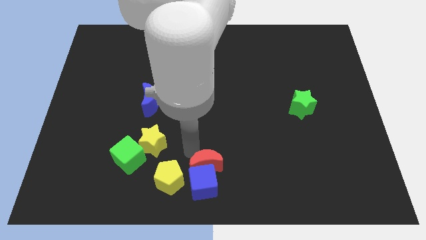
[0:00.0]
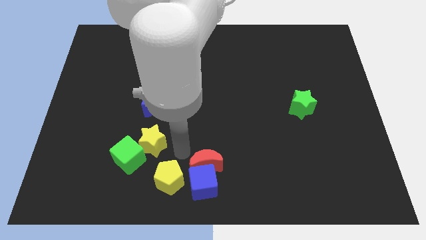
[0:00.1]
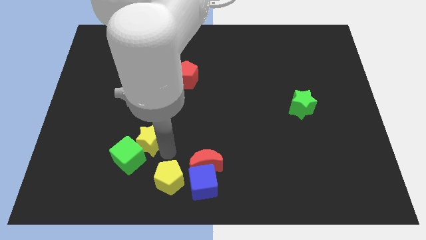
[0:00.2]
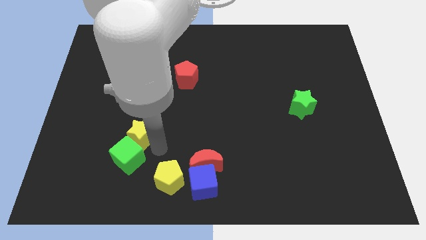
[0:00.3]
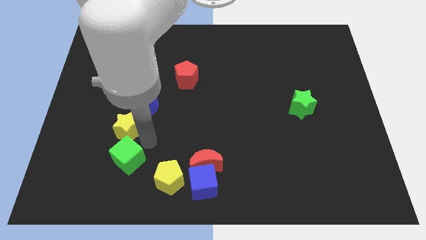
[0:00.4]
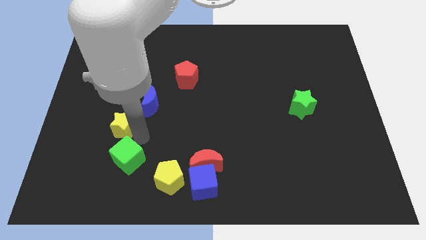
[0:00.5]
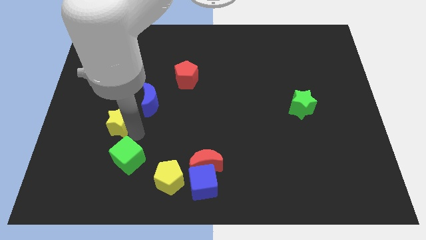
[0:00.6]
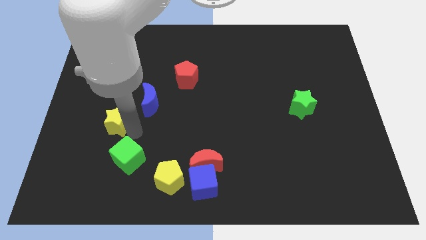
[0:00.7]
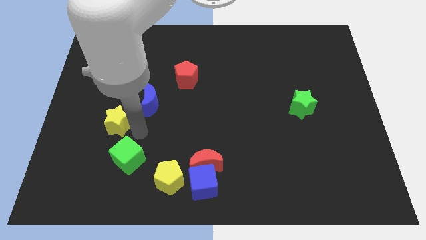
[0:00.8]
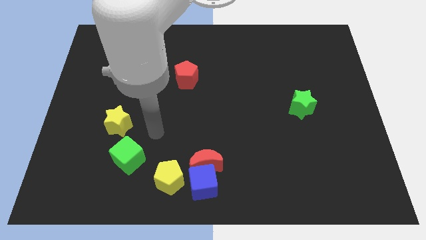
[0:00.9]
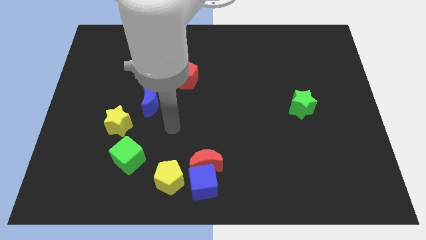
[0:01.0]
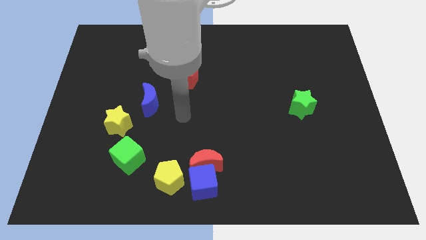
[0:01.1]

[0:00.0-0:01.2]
move the yellow star above the green cube

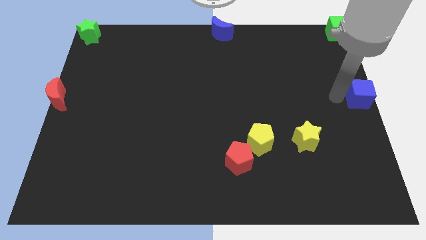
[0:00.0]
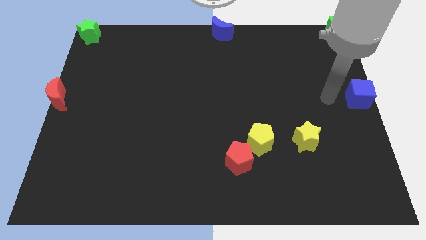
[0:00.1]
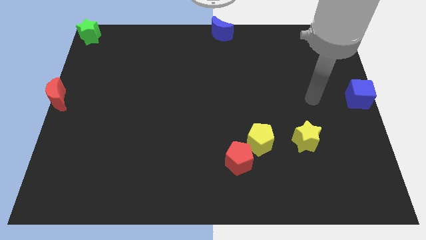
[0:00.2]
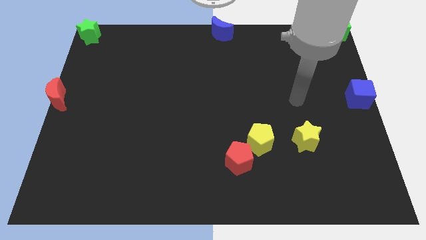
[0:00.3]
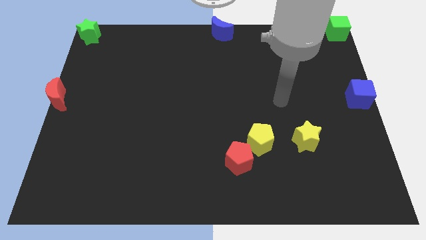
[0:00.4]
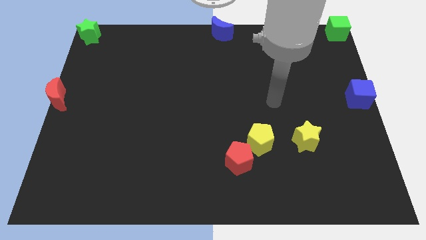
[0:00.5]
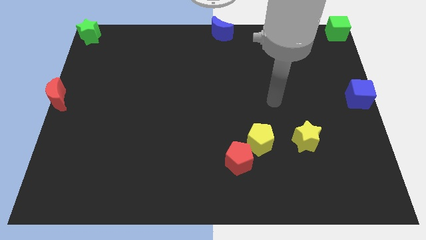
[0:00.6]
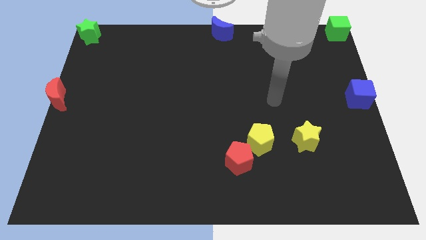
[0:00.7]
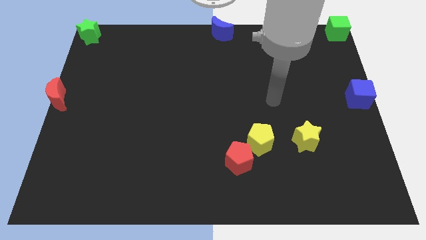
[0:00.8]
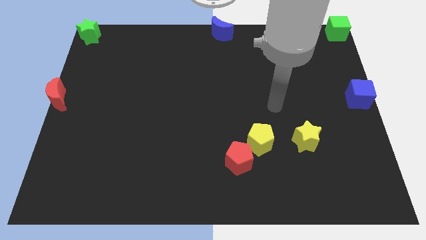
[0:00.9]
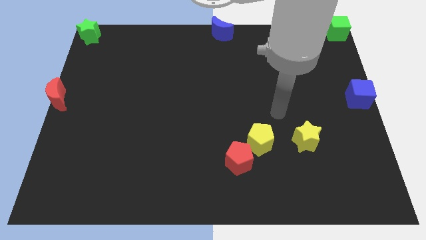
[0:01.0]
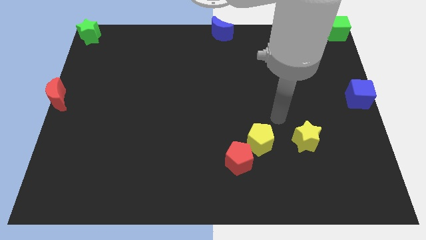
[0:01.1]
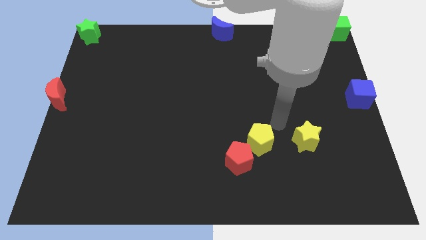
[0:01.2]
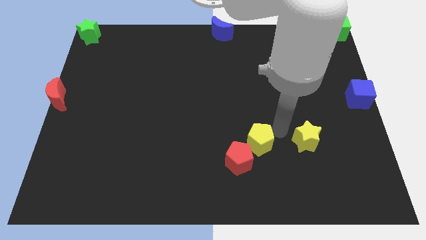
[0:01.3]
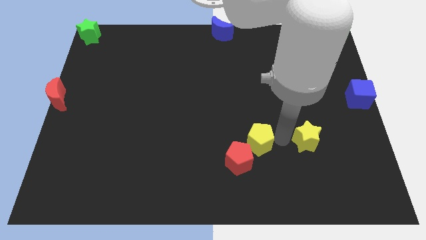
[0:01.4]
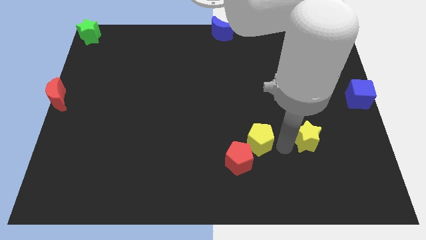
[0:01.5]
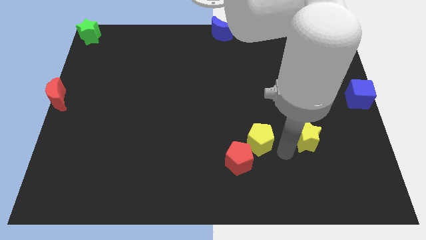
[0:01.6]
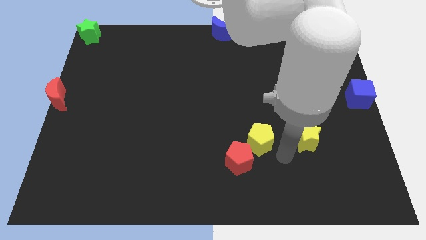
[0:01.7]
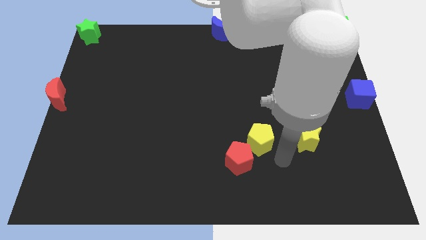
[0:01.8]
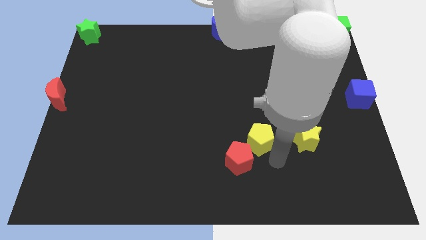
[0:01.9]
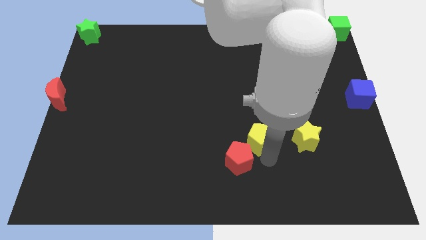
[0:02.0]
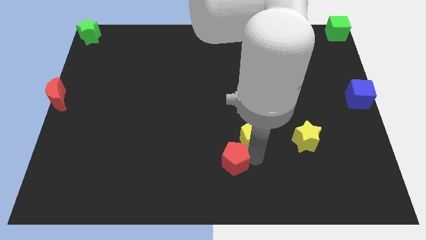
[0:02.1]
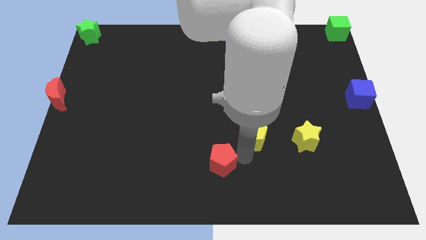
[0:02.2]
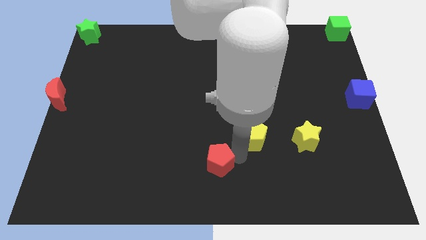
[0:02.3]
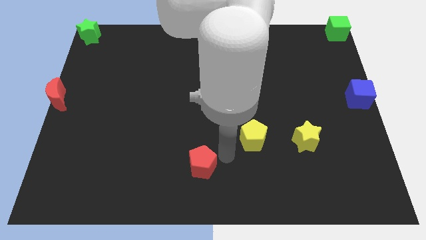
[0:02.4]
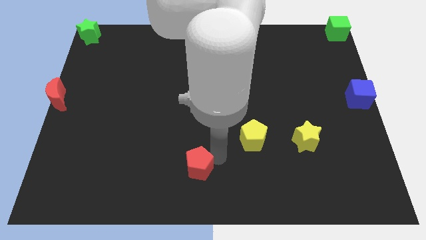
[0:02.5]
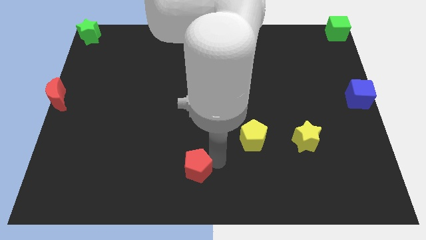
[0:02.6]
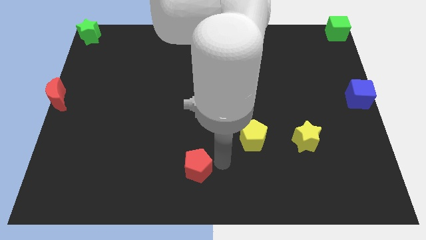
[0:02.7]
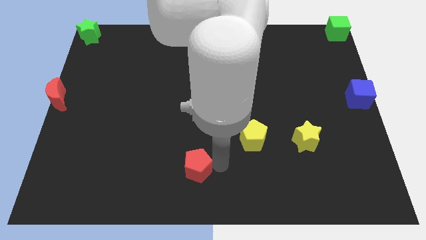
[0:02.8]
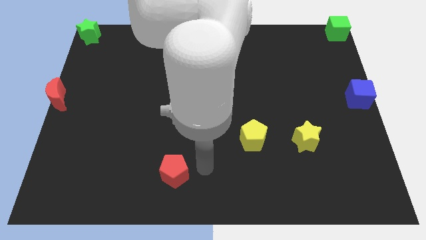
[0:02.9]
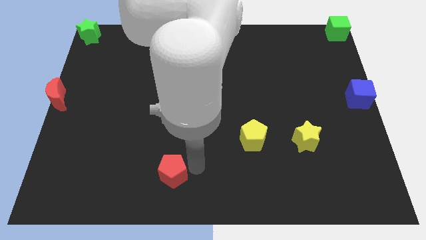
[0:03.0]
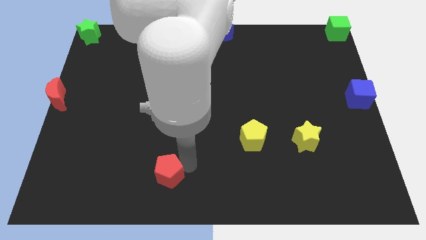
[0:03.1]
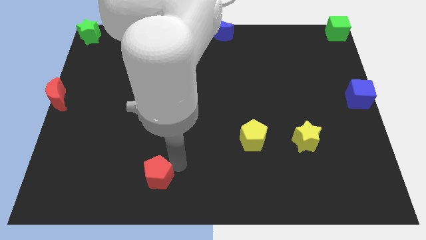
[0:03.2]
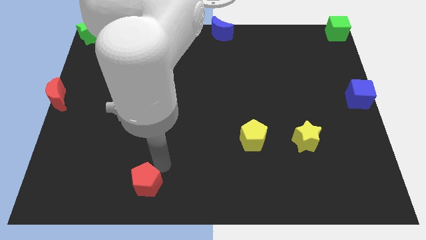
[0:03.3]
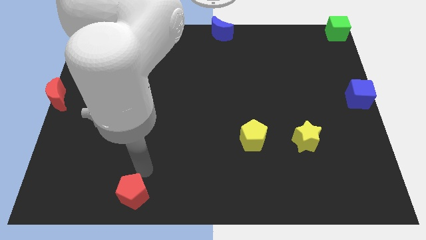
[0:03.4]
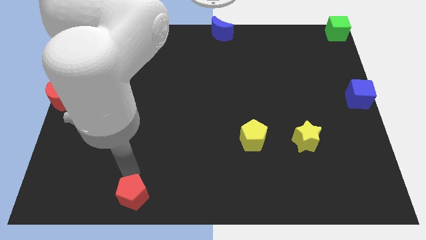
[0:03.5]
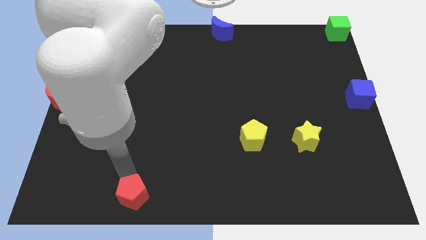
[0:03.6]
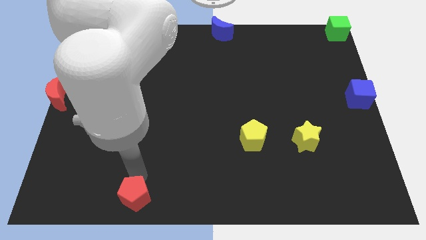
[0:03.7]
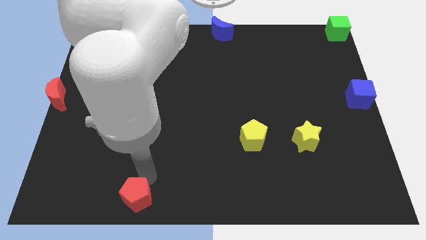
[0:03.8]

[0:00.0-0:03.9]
separate the red pentagon from yellow pentagon

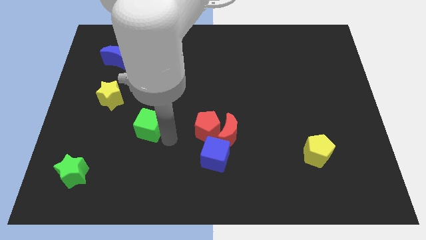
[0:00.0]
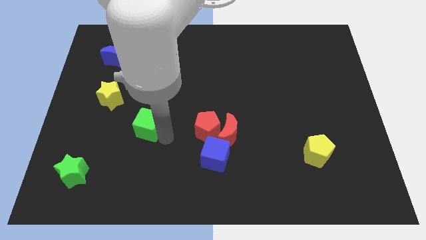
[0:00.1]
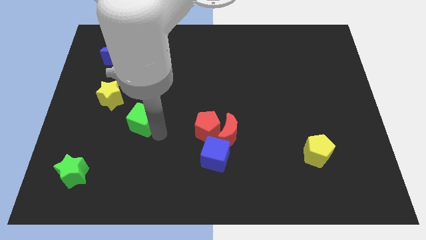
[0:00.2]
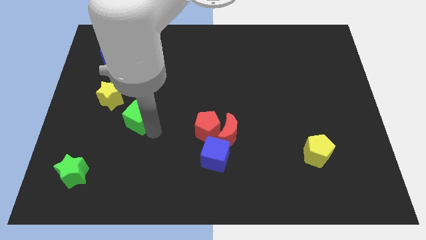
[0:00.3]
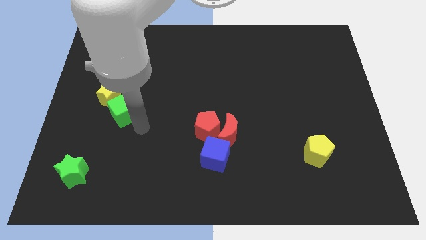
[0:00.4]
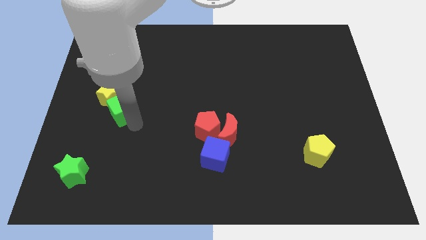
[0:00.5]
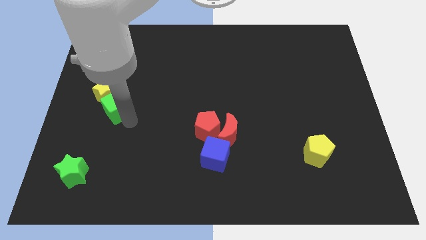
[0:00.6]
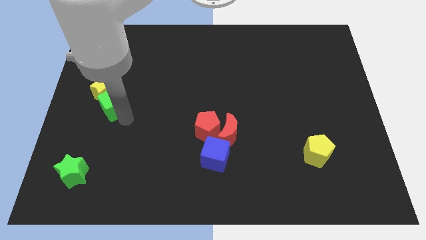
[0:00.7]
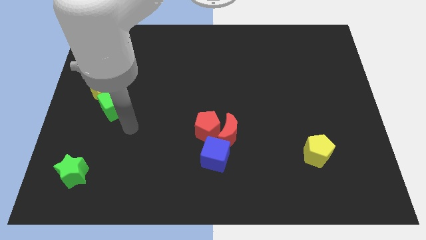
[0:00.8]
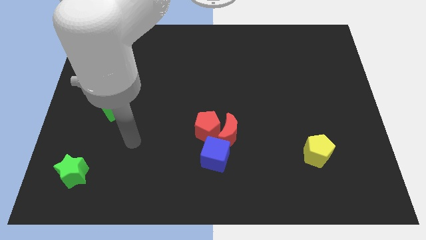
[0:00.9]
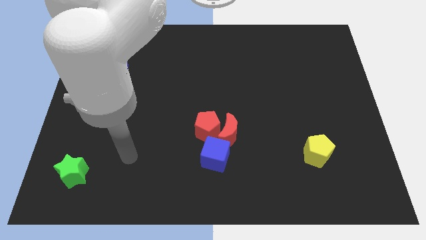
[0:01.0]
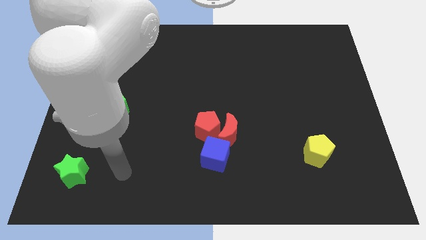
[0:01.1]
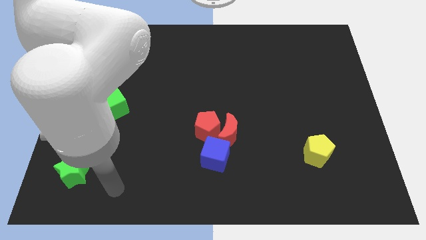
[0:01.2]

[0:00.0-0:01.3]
place the green square diagonally to the yellow star

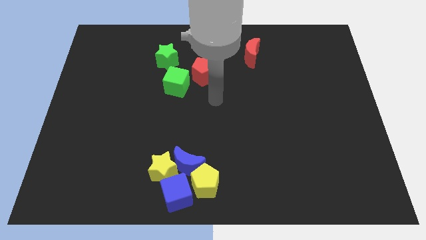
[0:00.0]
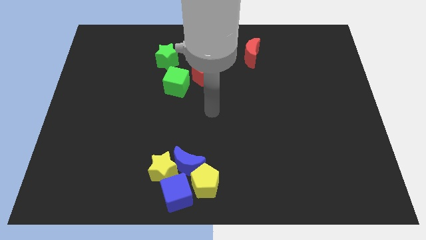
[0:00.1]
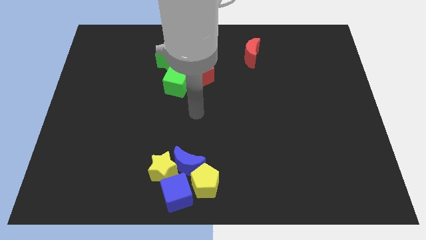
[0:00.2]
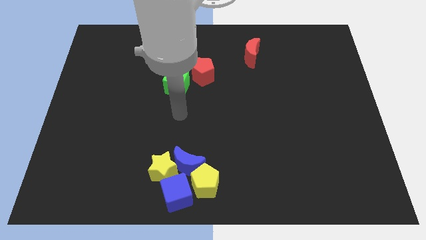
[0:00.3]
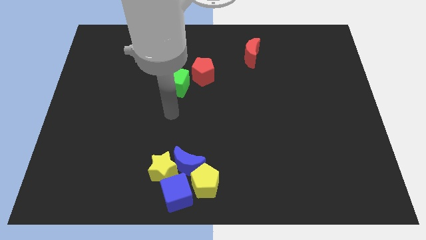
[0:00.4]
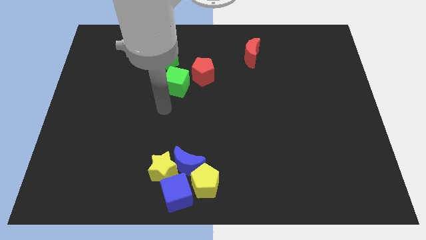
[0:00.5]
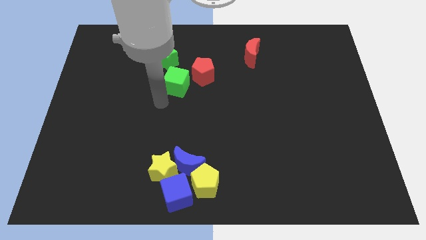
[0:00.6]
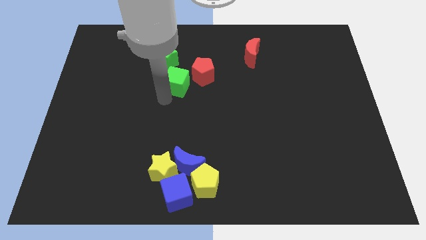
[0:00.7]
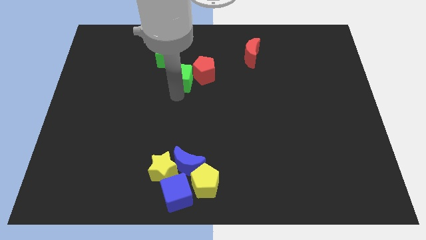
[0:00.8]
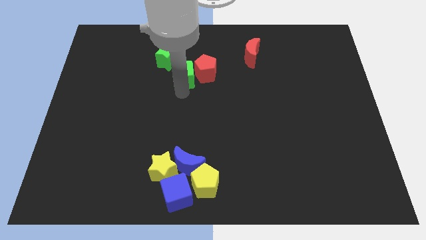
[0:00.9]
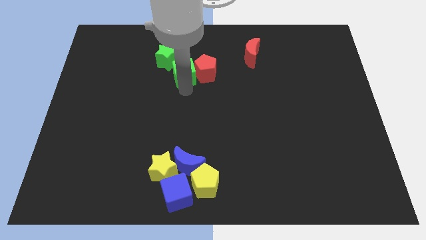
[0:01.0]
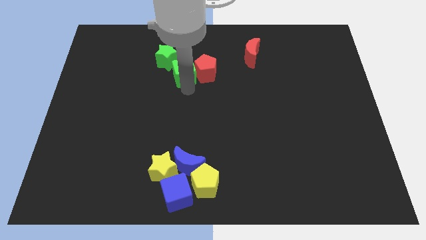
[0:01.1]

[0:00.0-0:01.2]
push the green cube into red pentagon

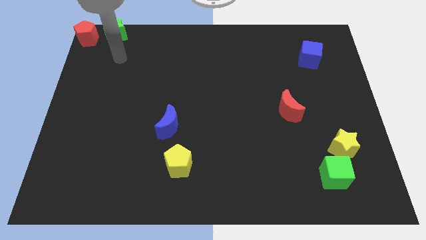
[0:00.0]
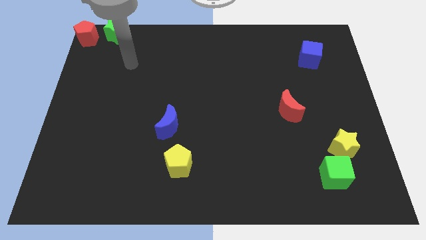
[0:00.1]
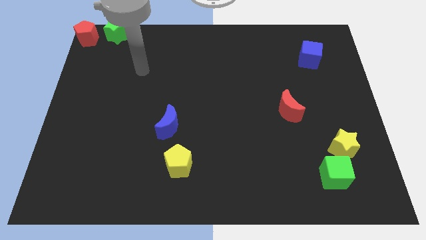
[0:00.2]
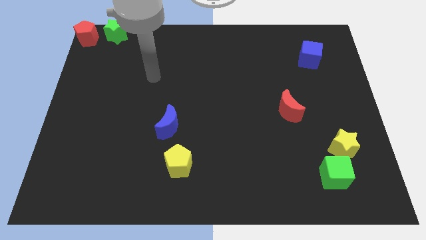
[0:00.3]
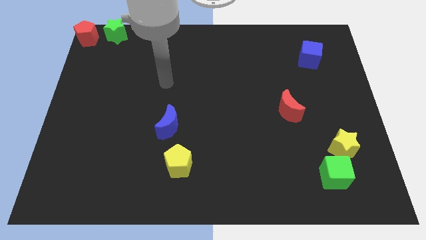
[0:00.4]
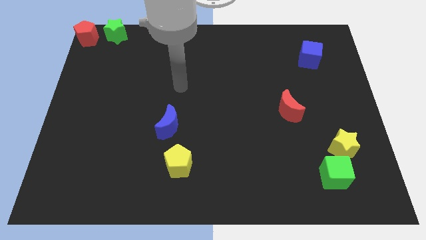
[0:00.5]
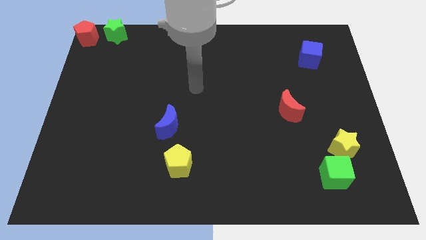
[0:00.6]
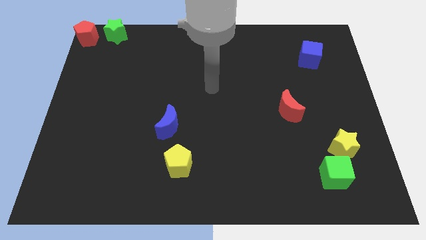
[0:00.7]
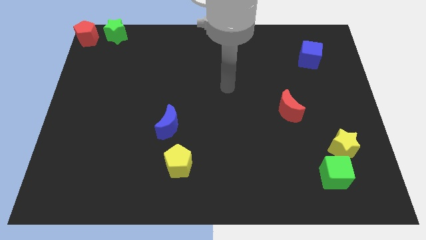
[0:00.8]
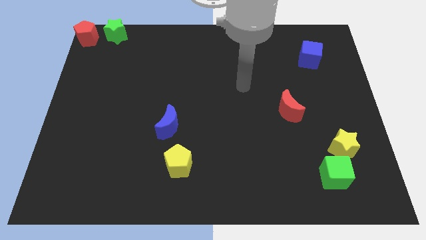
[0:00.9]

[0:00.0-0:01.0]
move your arm away from green star

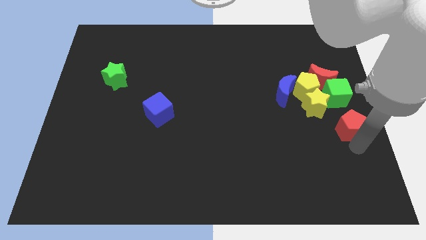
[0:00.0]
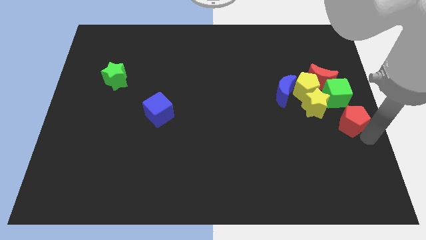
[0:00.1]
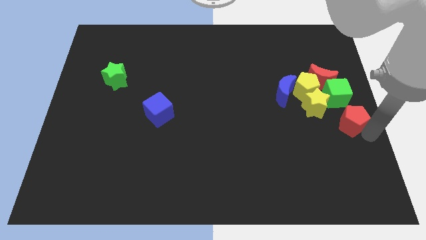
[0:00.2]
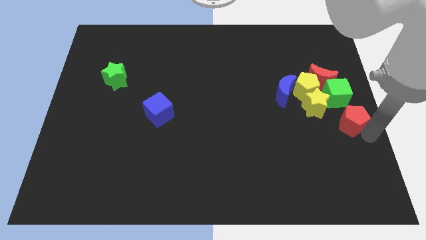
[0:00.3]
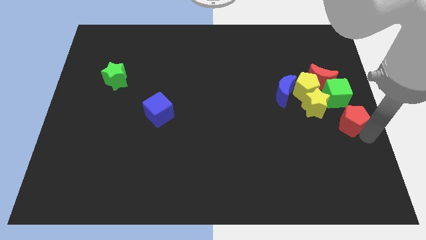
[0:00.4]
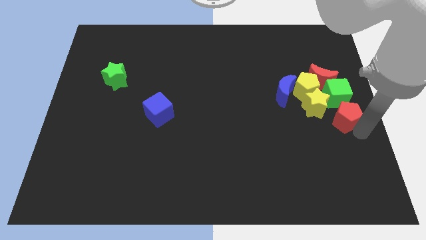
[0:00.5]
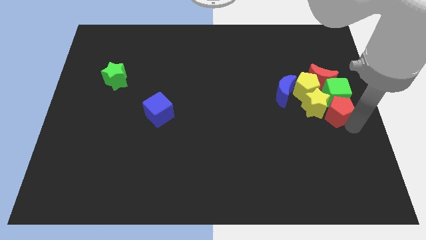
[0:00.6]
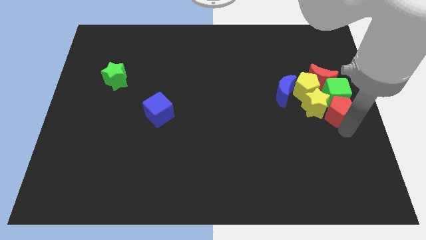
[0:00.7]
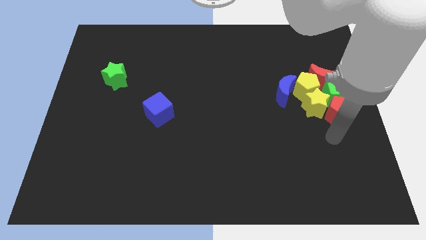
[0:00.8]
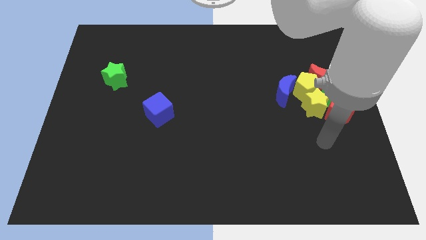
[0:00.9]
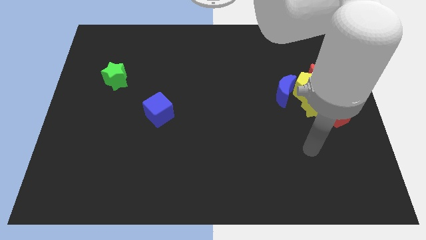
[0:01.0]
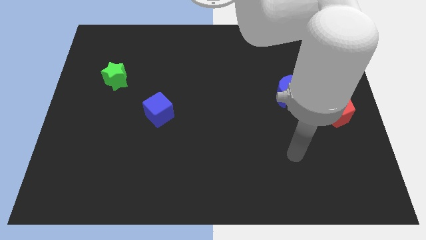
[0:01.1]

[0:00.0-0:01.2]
place the red pentagon below the green cube
